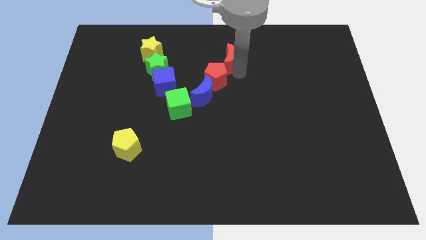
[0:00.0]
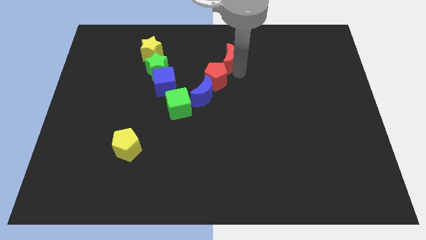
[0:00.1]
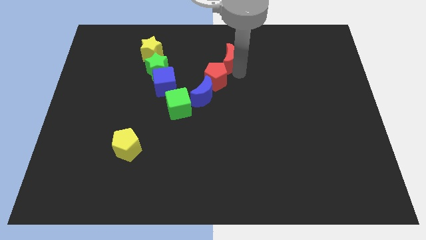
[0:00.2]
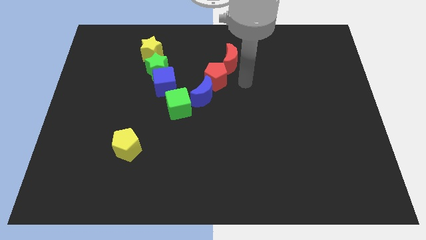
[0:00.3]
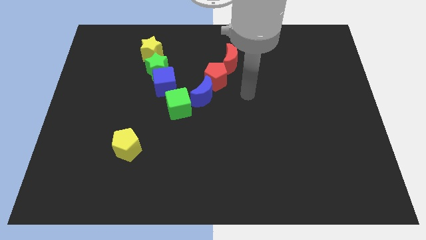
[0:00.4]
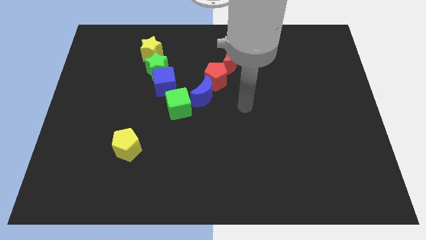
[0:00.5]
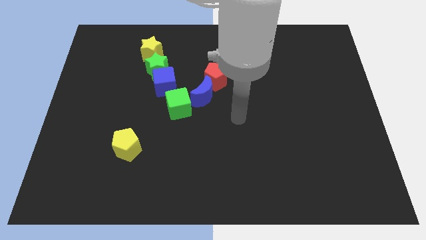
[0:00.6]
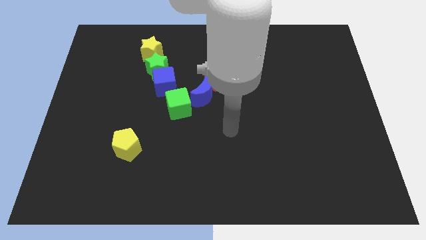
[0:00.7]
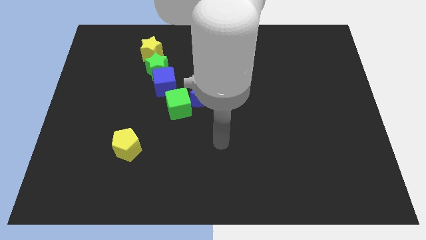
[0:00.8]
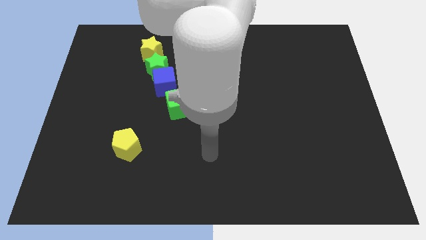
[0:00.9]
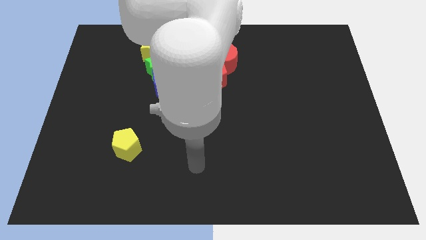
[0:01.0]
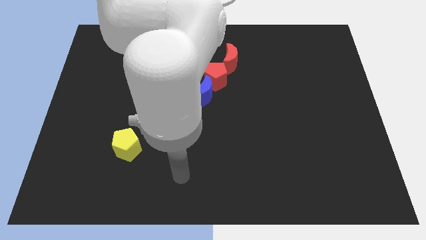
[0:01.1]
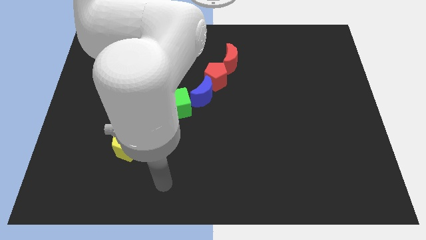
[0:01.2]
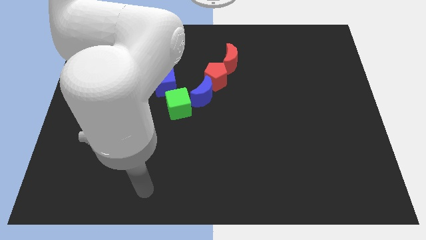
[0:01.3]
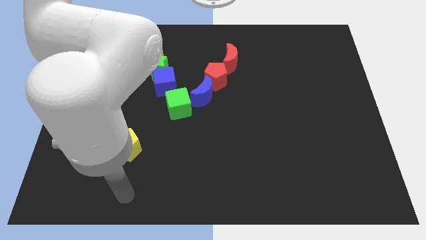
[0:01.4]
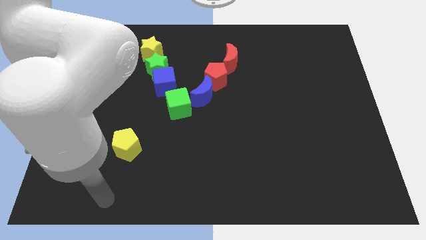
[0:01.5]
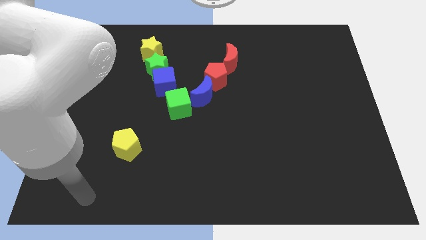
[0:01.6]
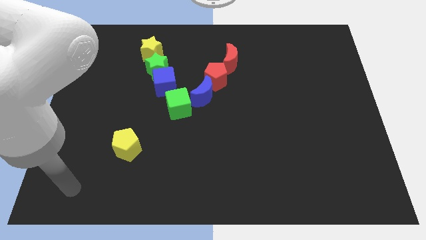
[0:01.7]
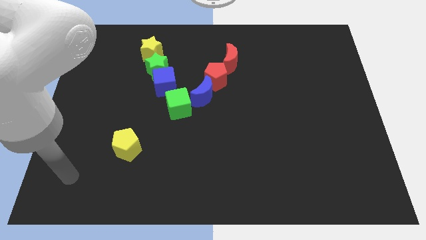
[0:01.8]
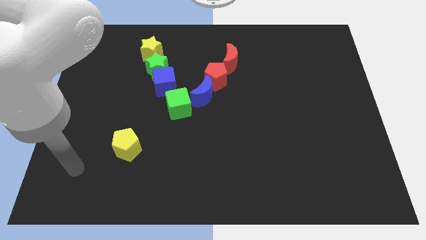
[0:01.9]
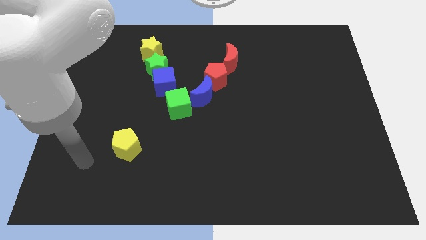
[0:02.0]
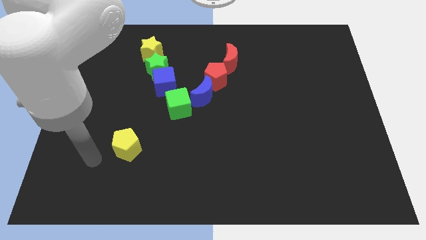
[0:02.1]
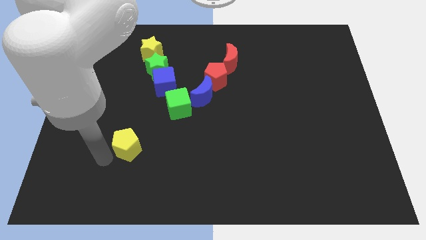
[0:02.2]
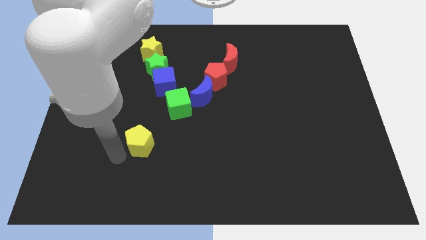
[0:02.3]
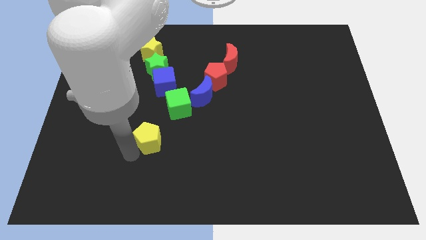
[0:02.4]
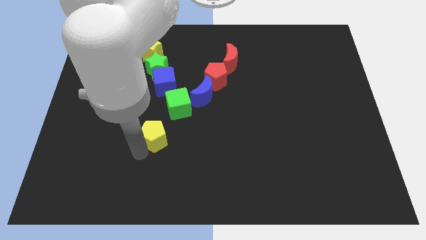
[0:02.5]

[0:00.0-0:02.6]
move the arm away from the red moon

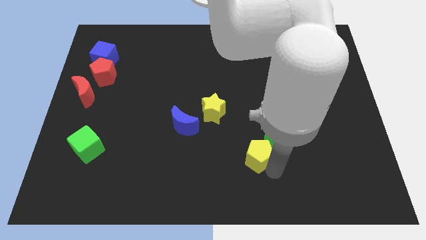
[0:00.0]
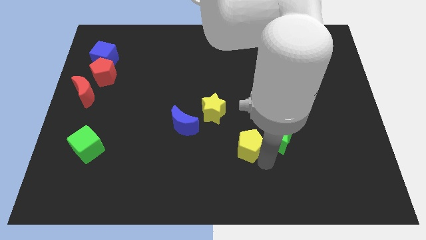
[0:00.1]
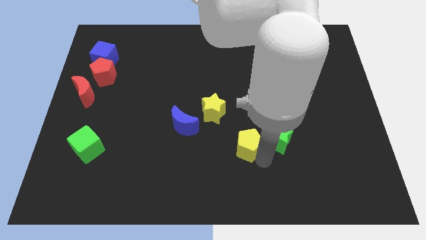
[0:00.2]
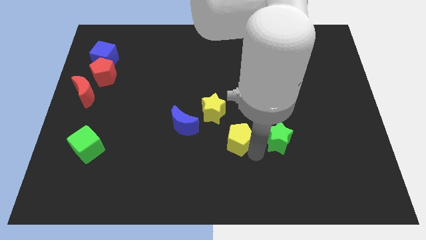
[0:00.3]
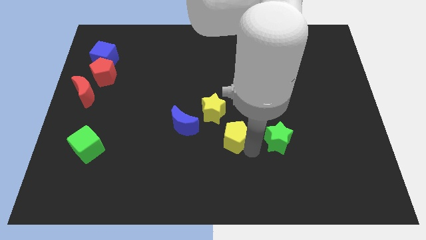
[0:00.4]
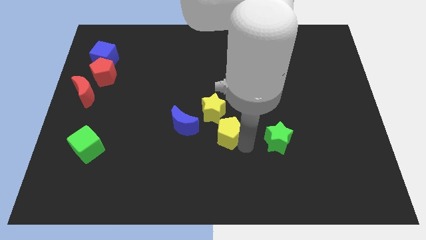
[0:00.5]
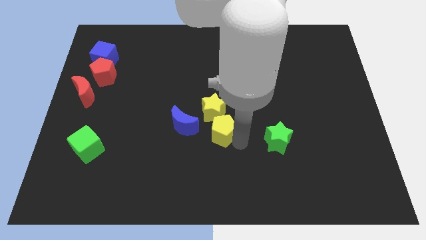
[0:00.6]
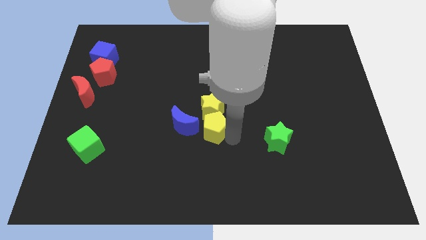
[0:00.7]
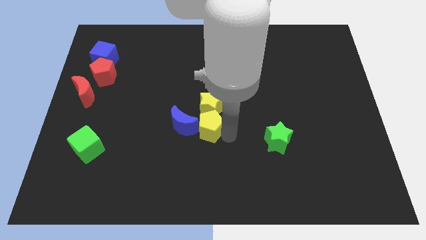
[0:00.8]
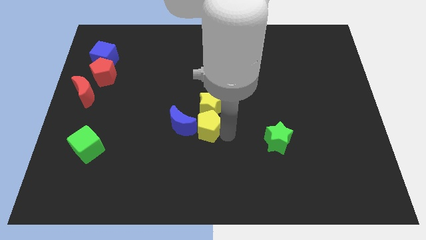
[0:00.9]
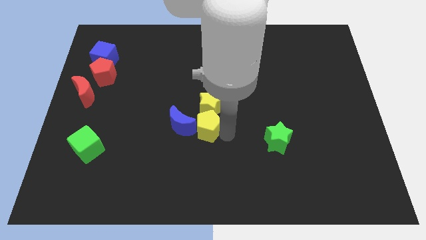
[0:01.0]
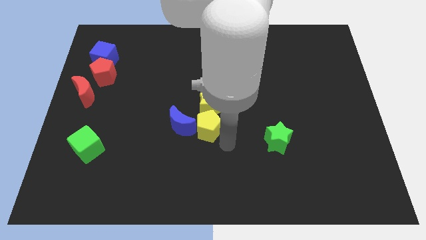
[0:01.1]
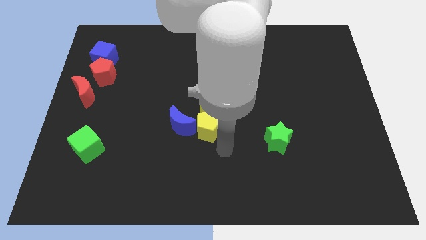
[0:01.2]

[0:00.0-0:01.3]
group the yellow blocks and blue crescent at the center of the board

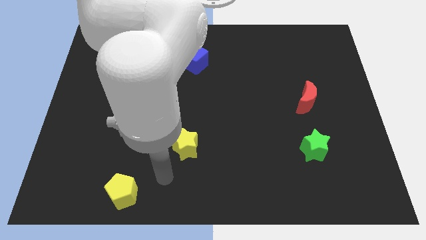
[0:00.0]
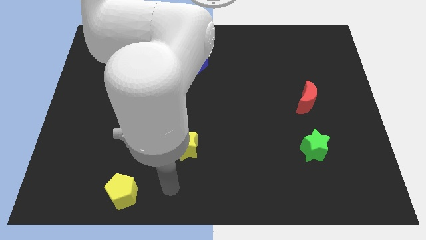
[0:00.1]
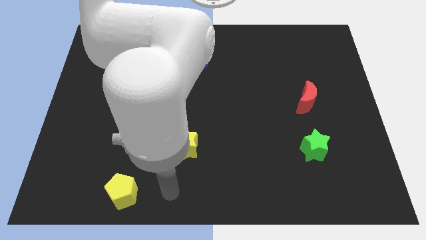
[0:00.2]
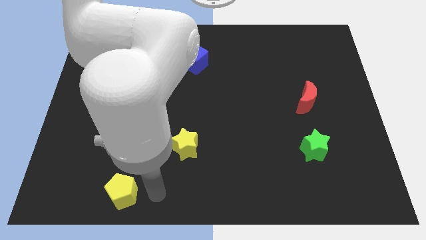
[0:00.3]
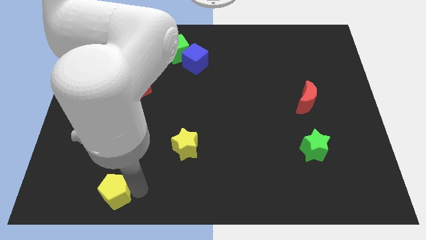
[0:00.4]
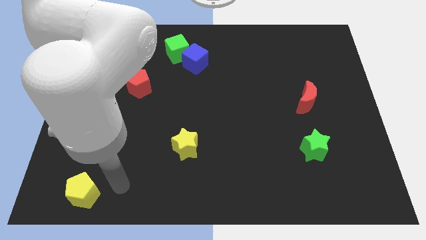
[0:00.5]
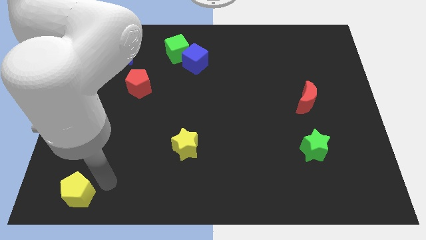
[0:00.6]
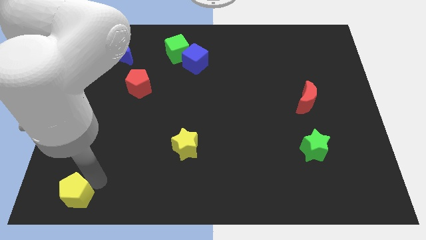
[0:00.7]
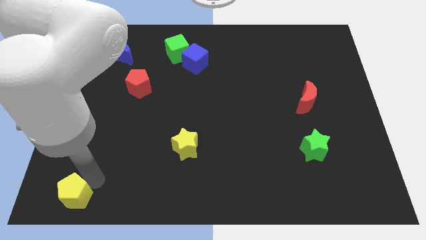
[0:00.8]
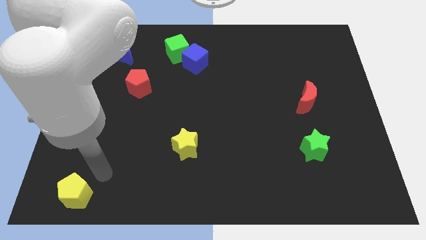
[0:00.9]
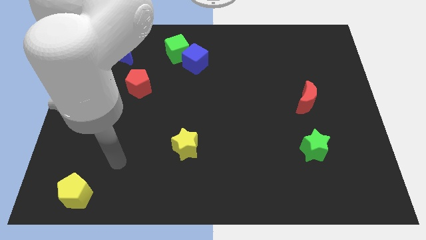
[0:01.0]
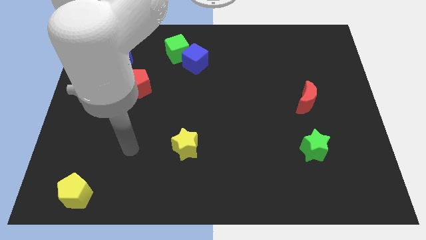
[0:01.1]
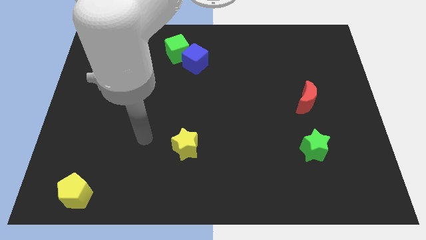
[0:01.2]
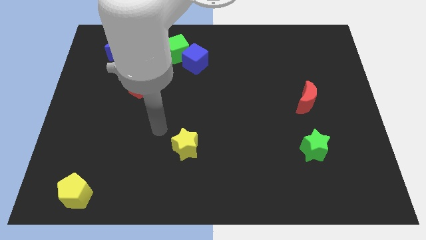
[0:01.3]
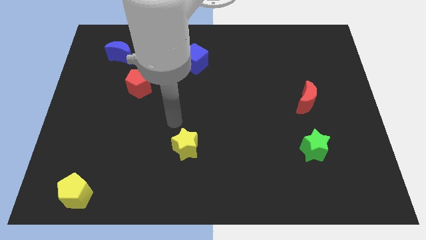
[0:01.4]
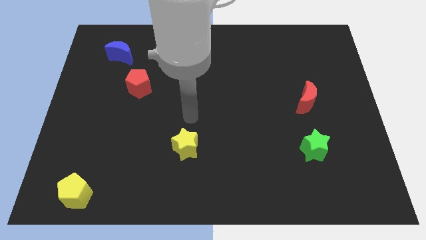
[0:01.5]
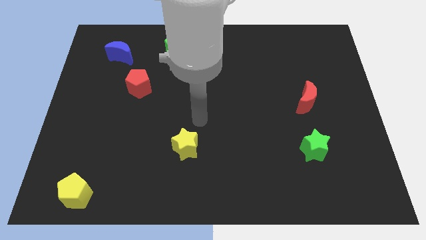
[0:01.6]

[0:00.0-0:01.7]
push the yellow pentagon to the bottom left of the board

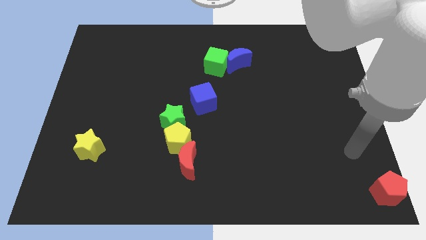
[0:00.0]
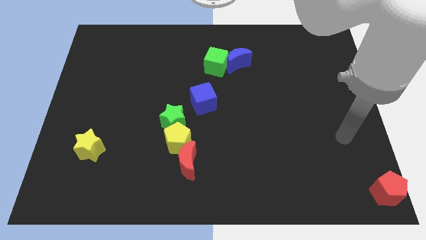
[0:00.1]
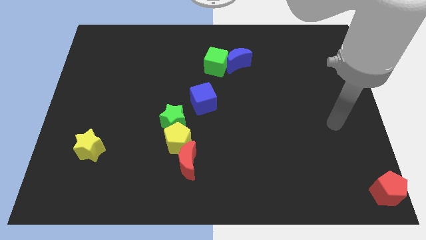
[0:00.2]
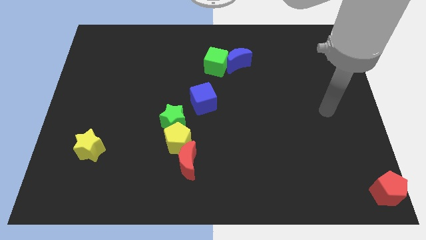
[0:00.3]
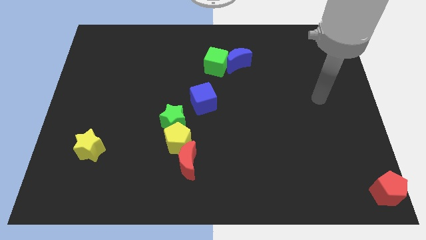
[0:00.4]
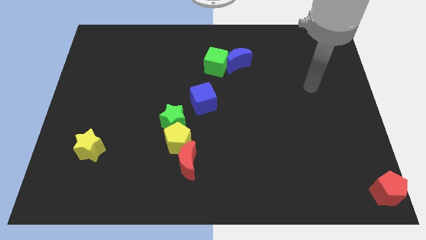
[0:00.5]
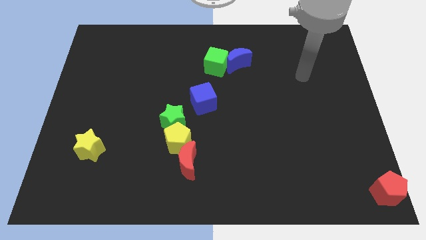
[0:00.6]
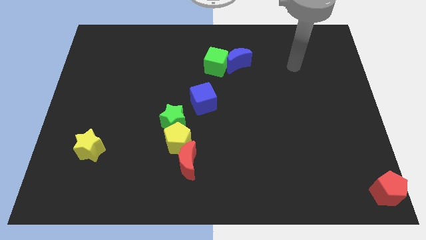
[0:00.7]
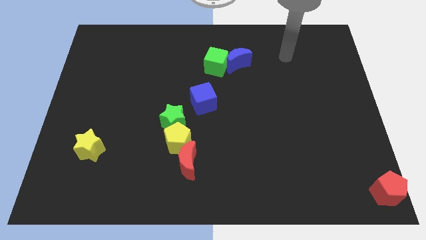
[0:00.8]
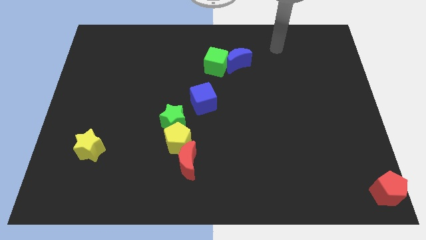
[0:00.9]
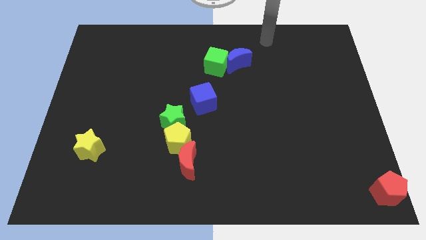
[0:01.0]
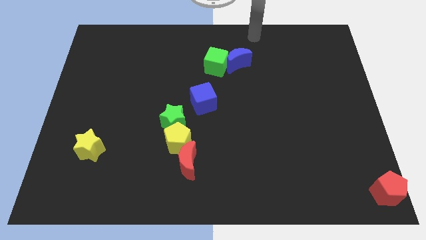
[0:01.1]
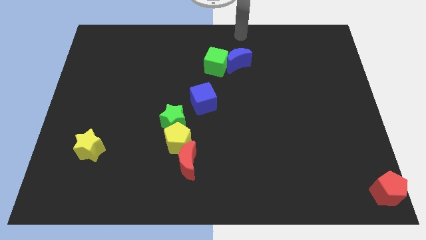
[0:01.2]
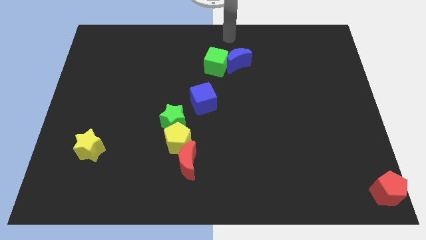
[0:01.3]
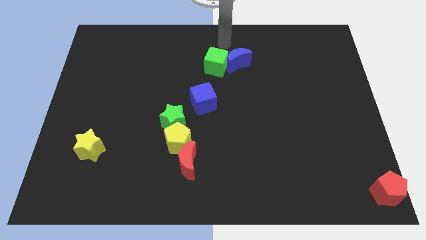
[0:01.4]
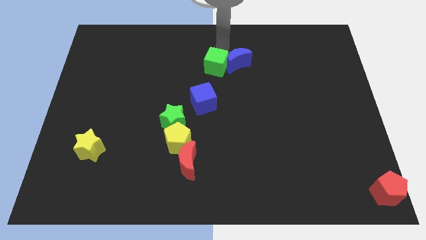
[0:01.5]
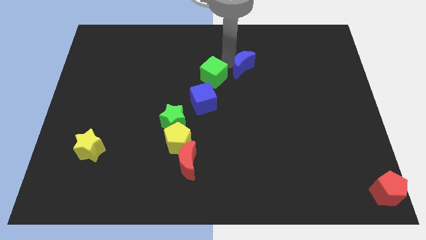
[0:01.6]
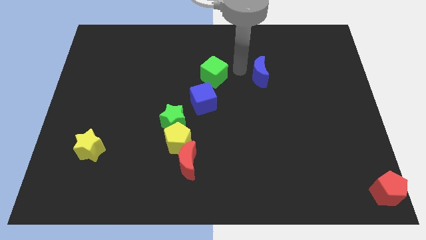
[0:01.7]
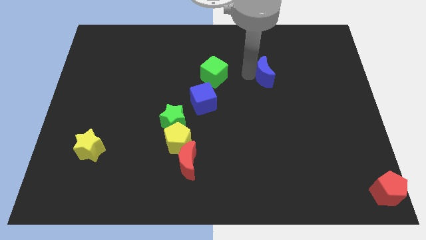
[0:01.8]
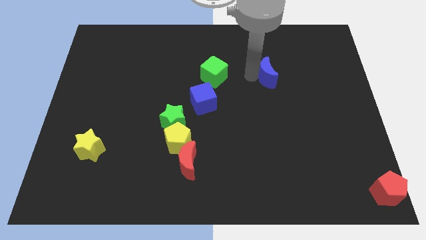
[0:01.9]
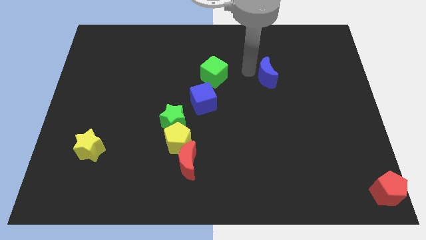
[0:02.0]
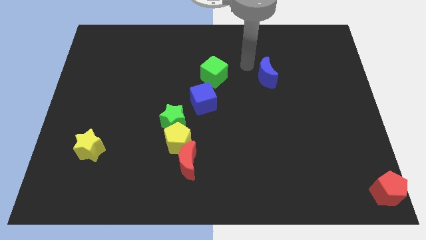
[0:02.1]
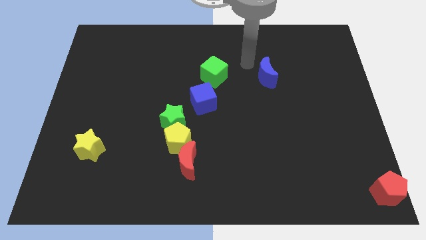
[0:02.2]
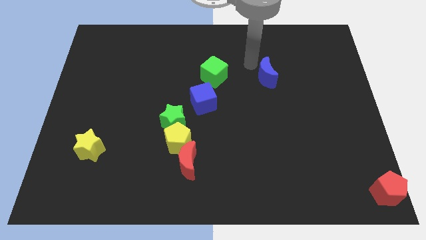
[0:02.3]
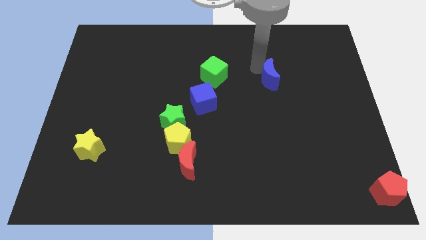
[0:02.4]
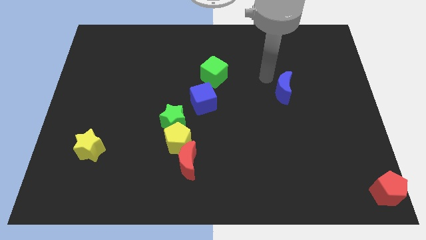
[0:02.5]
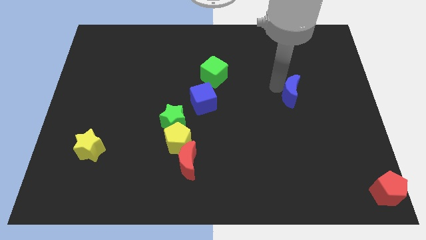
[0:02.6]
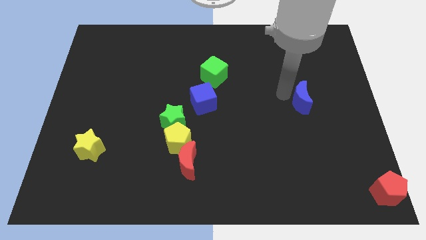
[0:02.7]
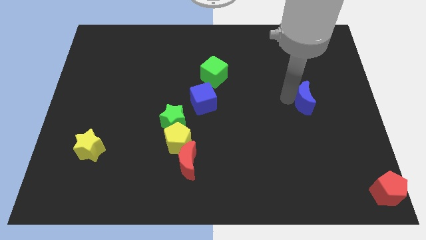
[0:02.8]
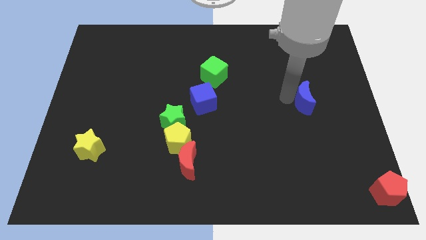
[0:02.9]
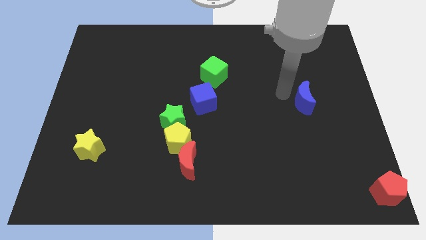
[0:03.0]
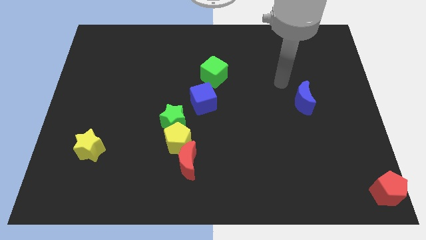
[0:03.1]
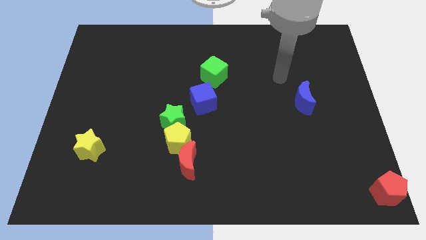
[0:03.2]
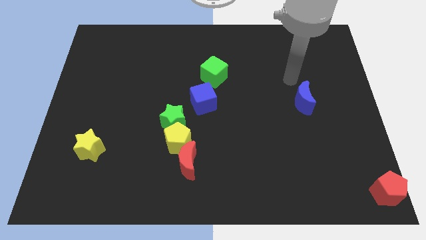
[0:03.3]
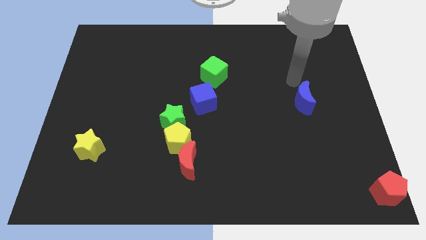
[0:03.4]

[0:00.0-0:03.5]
separate green cube and blue moon
